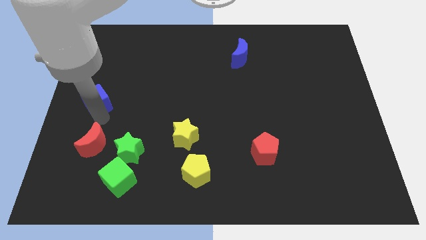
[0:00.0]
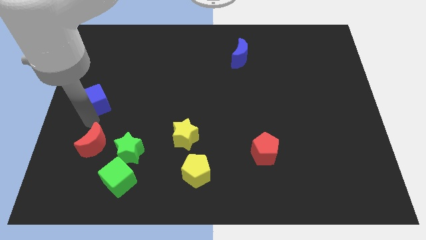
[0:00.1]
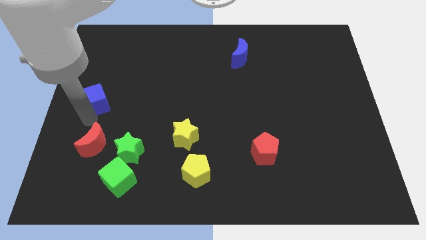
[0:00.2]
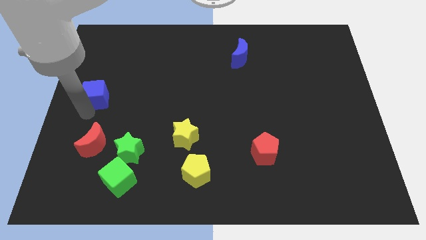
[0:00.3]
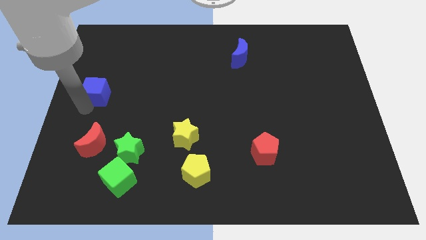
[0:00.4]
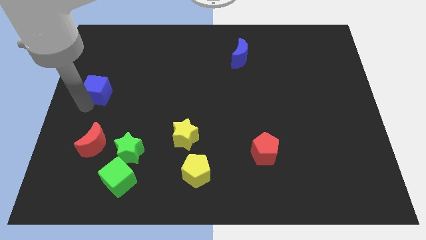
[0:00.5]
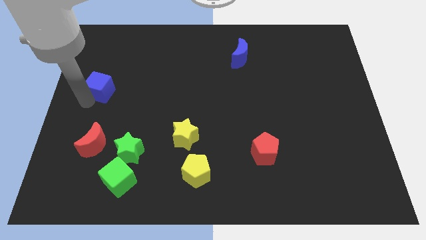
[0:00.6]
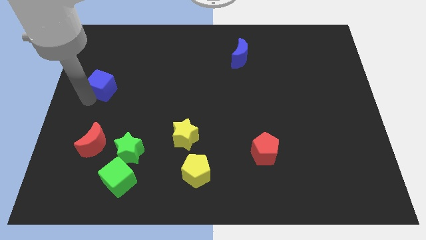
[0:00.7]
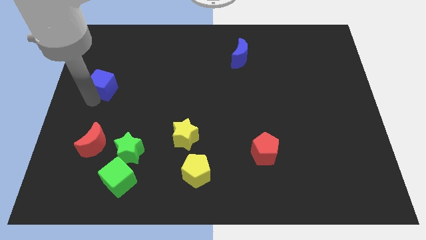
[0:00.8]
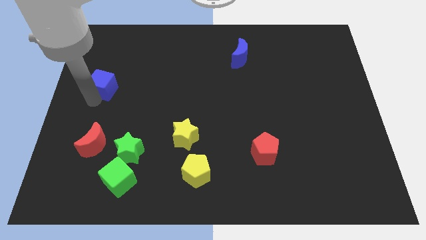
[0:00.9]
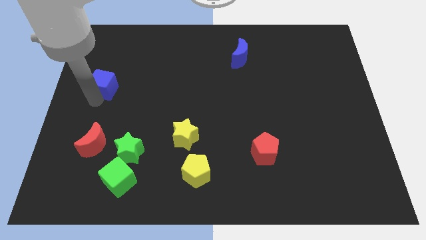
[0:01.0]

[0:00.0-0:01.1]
push the blue cube slightly to the top

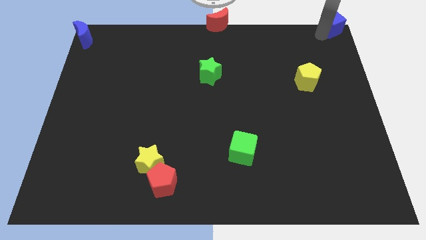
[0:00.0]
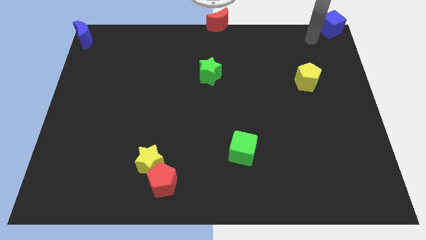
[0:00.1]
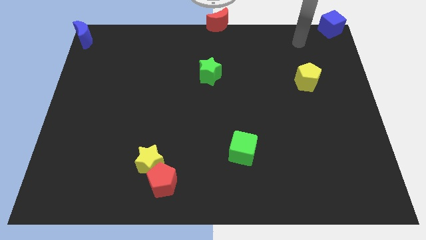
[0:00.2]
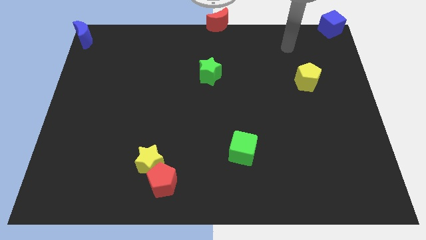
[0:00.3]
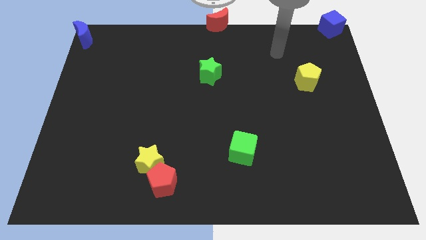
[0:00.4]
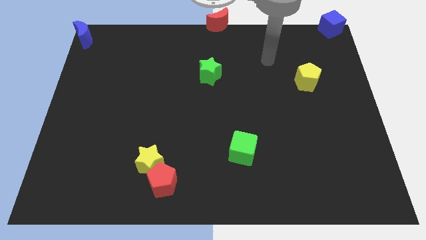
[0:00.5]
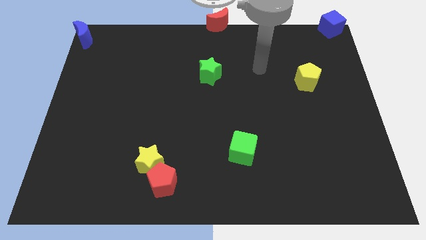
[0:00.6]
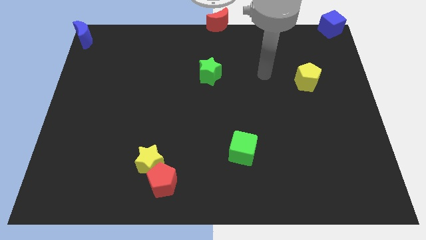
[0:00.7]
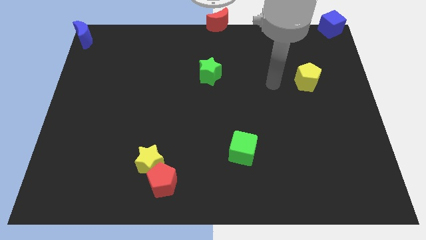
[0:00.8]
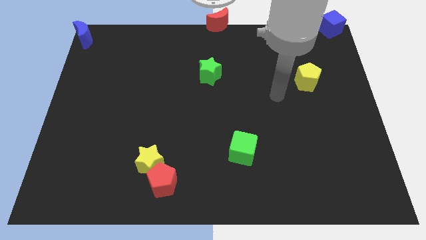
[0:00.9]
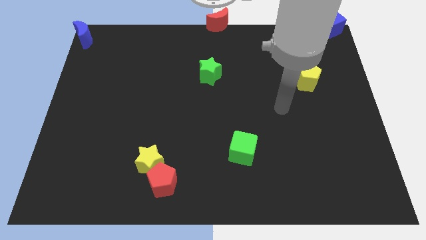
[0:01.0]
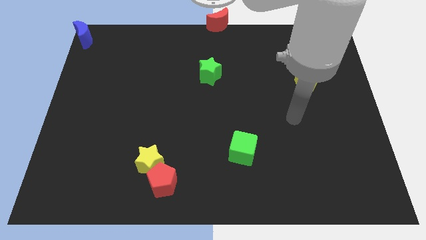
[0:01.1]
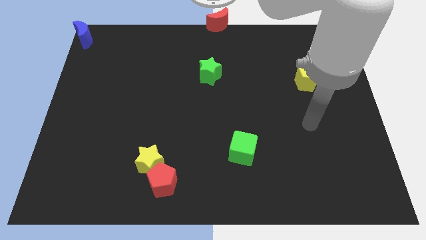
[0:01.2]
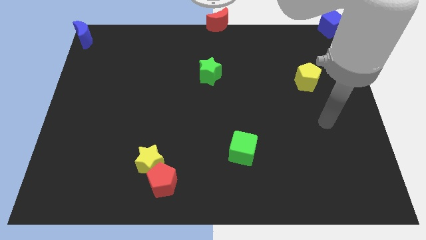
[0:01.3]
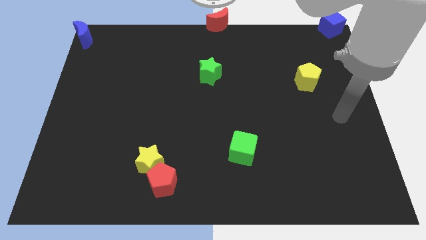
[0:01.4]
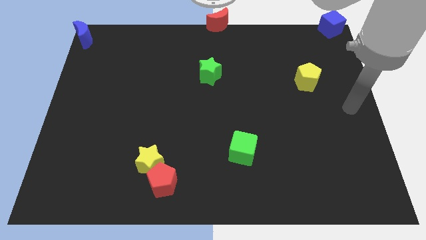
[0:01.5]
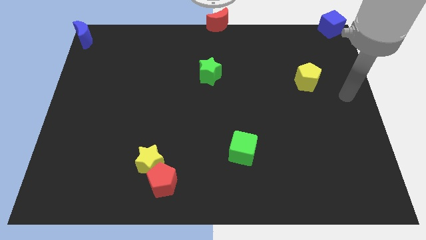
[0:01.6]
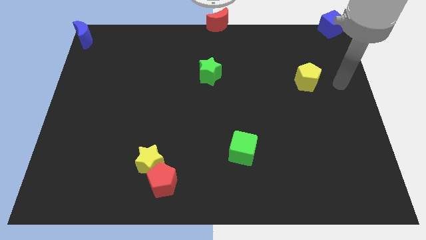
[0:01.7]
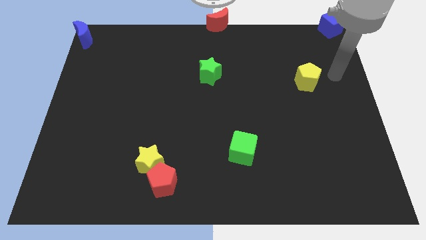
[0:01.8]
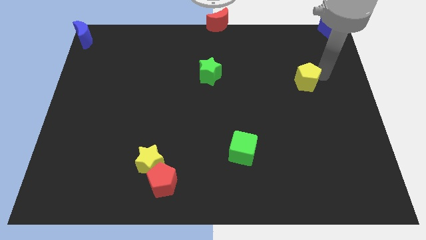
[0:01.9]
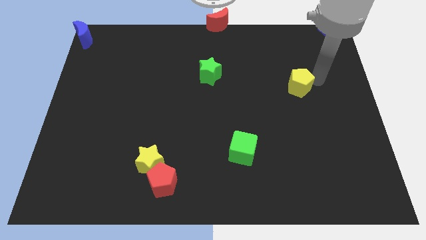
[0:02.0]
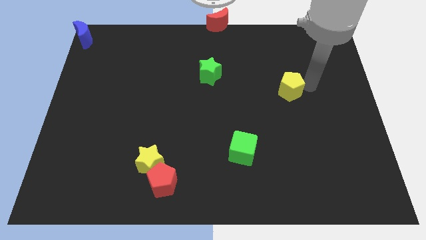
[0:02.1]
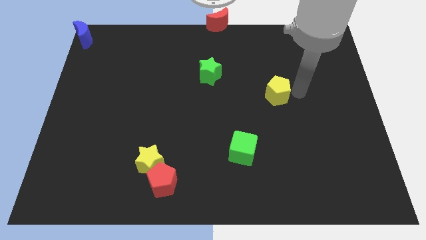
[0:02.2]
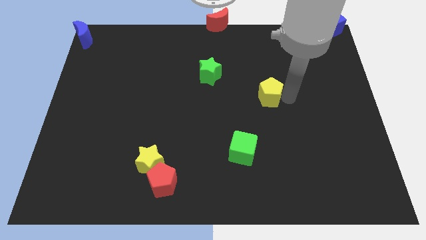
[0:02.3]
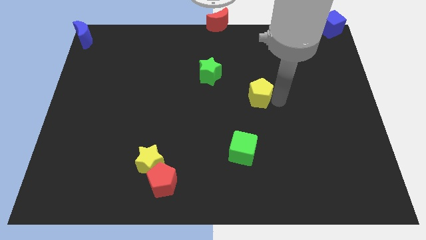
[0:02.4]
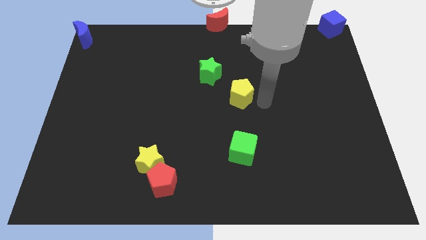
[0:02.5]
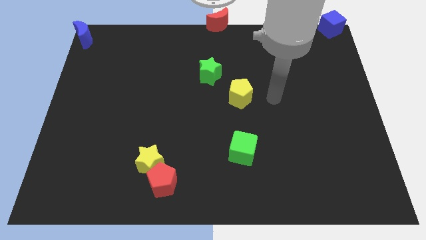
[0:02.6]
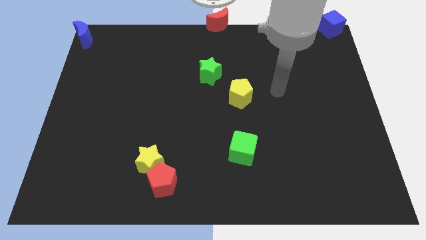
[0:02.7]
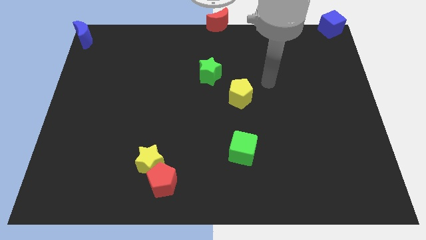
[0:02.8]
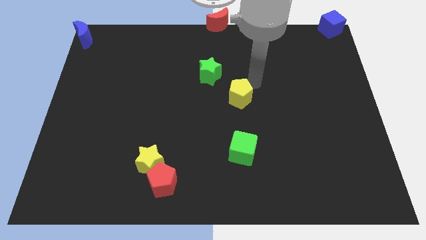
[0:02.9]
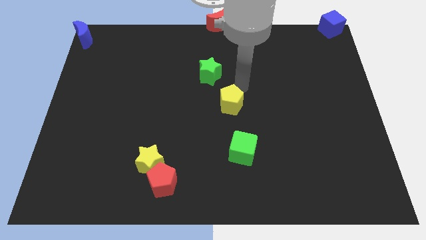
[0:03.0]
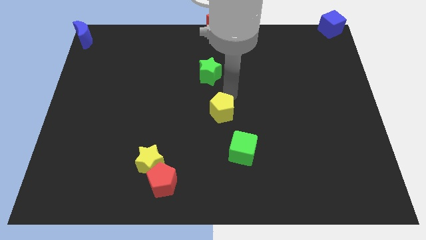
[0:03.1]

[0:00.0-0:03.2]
slide the yellow pentagon in between the green blocks

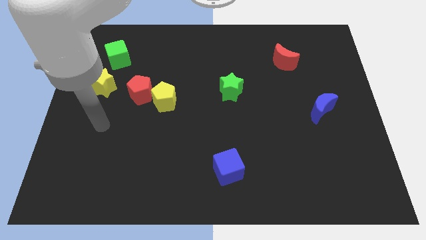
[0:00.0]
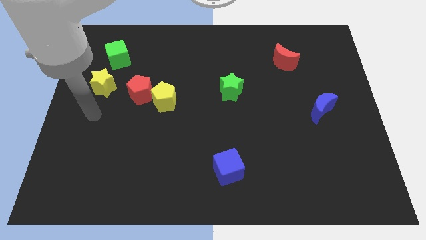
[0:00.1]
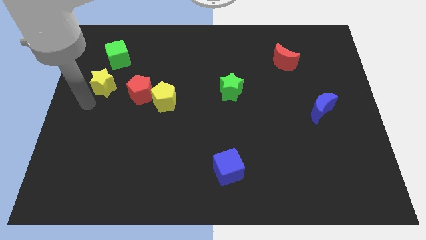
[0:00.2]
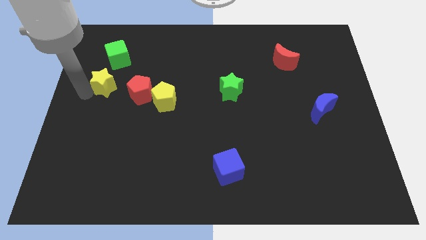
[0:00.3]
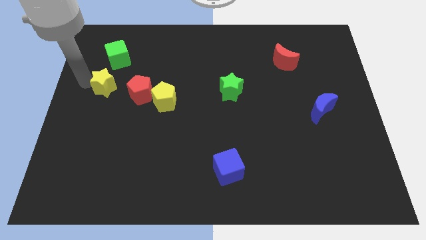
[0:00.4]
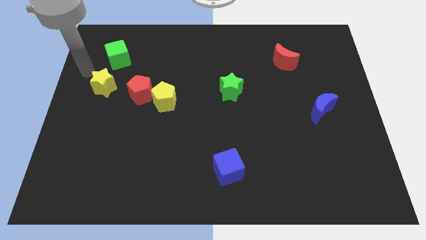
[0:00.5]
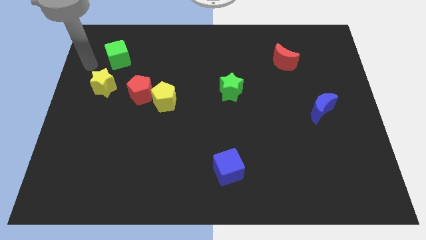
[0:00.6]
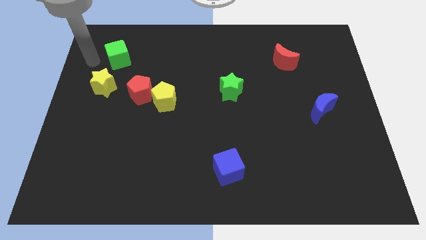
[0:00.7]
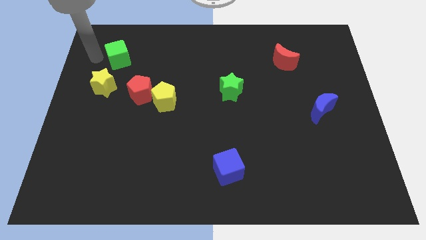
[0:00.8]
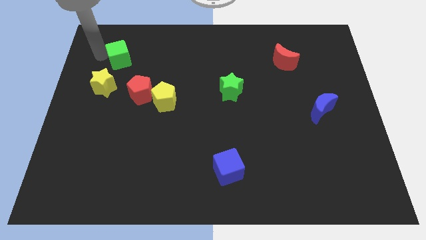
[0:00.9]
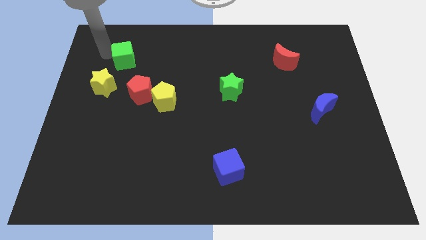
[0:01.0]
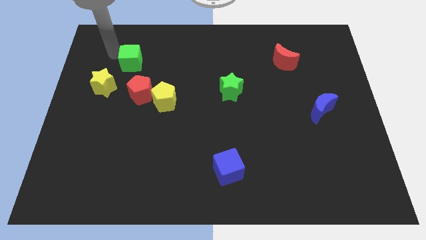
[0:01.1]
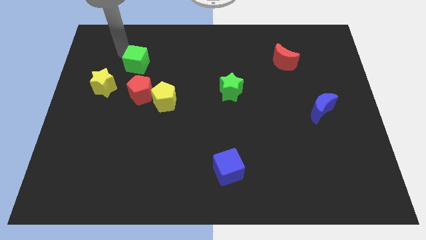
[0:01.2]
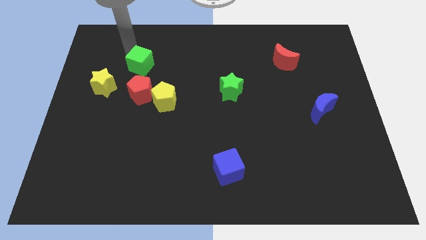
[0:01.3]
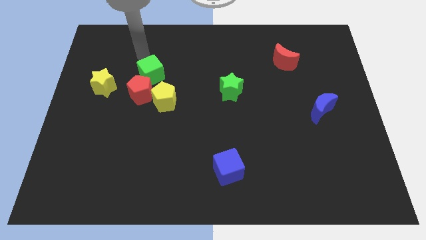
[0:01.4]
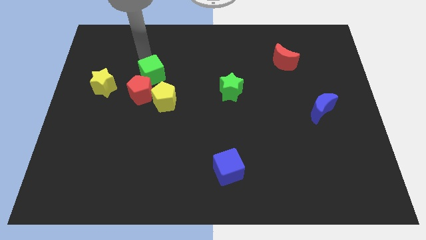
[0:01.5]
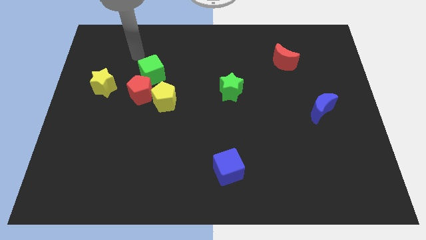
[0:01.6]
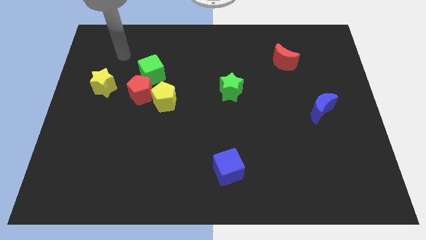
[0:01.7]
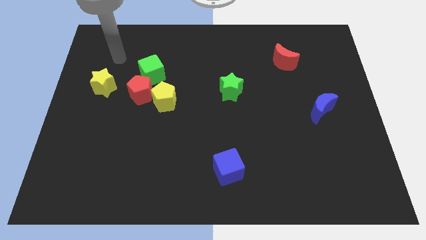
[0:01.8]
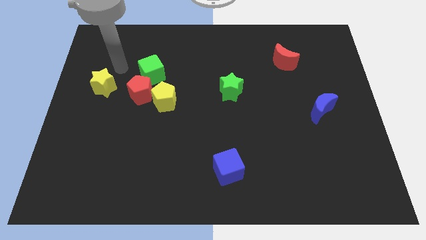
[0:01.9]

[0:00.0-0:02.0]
place green cube near to red polygon

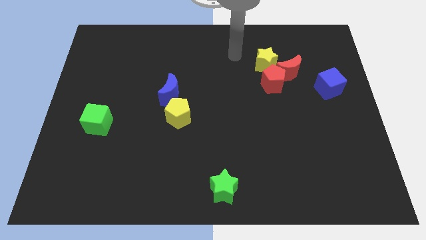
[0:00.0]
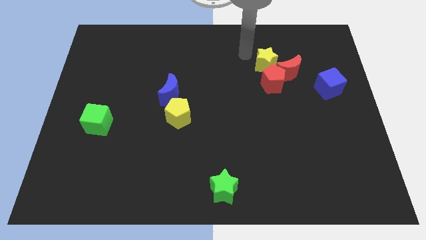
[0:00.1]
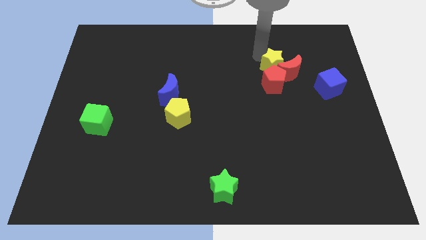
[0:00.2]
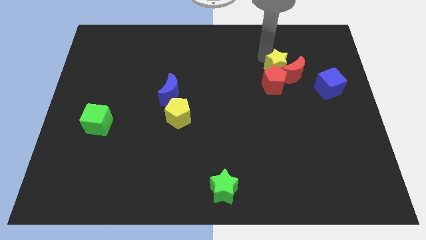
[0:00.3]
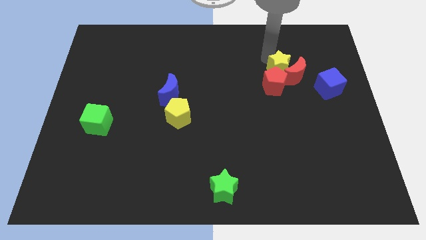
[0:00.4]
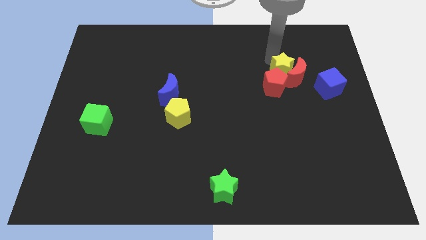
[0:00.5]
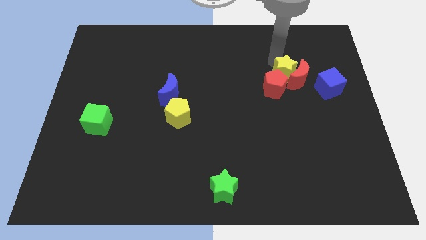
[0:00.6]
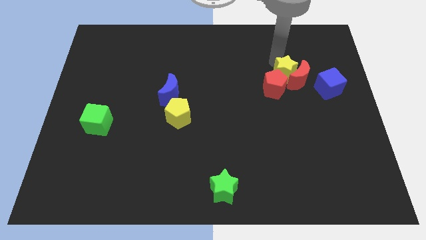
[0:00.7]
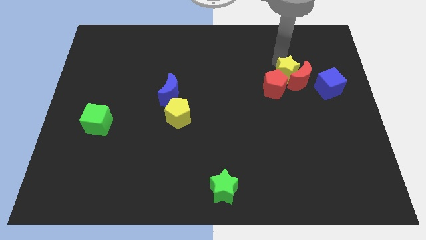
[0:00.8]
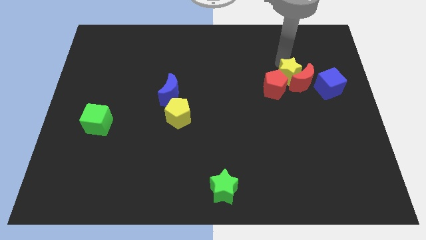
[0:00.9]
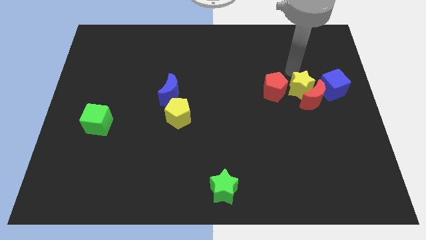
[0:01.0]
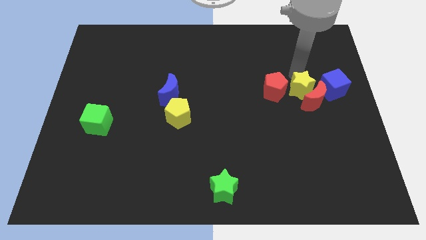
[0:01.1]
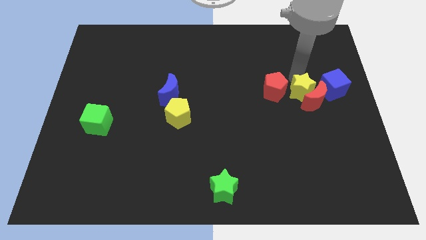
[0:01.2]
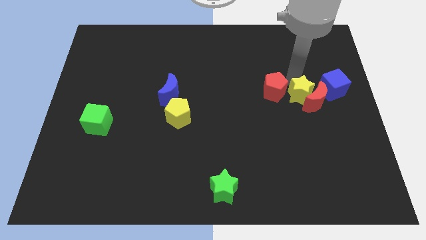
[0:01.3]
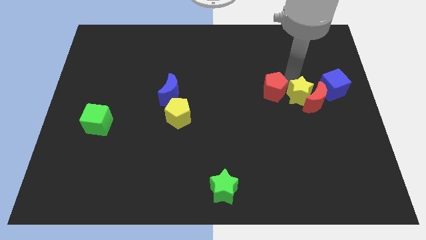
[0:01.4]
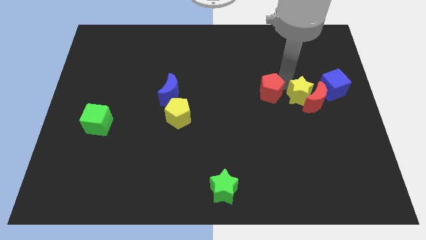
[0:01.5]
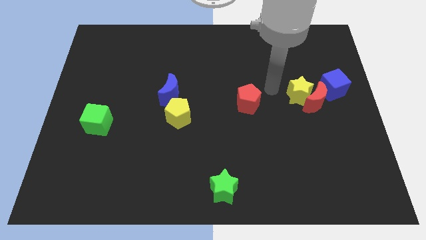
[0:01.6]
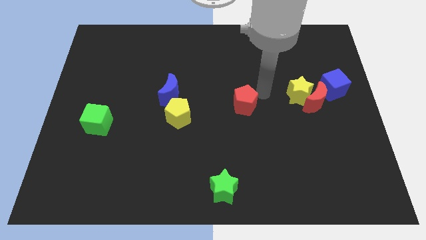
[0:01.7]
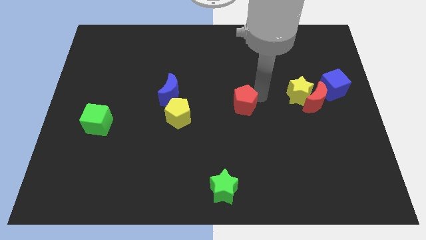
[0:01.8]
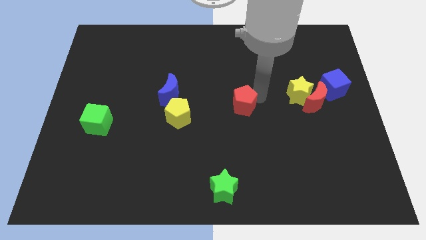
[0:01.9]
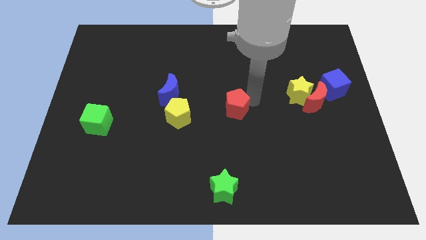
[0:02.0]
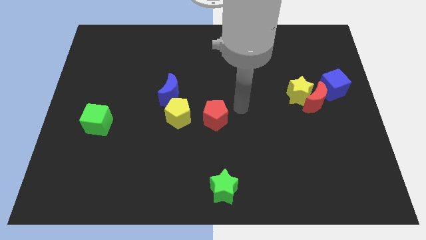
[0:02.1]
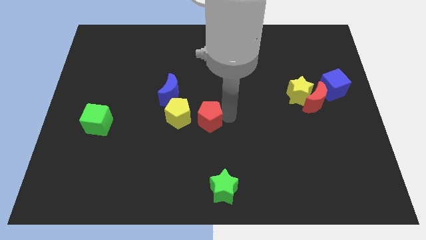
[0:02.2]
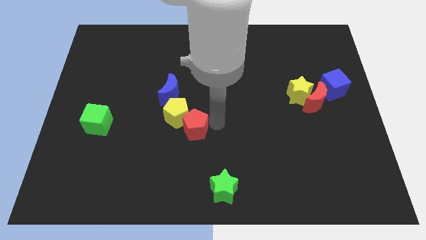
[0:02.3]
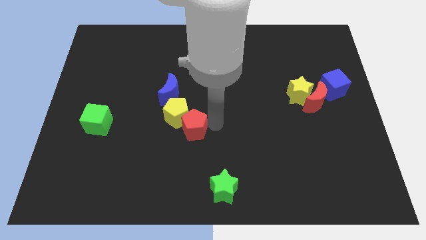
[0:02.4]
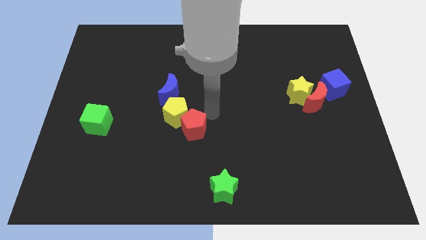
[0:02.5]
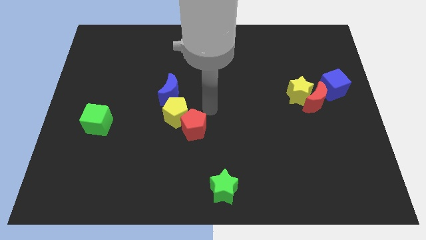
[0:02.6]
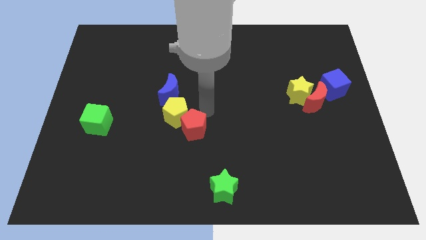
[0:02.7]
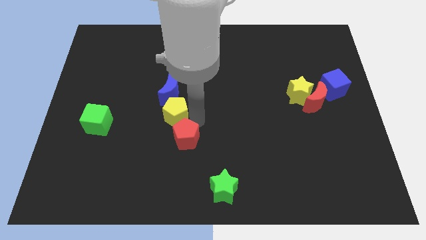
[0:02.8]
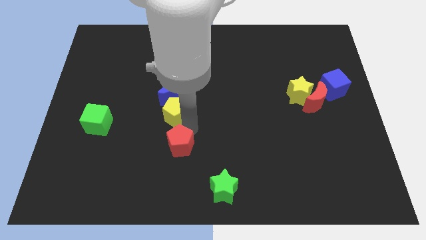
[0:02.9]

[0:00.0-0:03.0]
separate the red pentagon from a group of blocks
